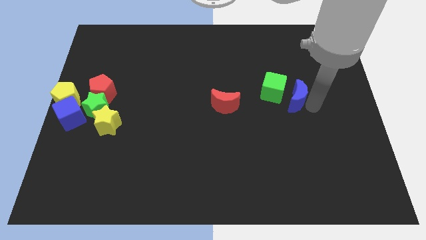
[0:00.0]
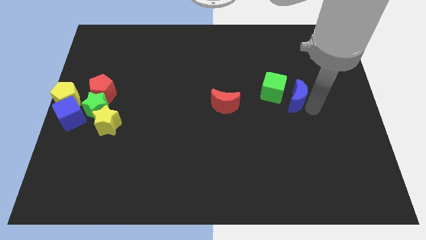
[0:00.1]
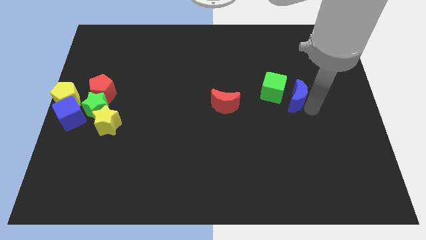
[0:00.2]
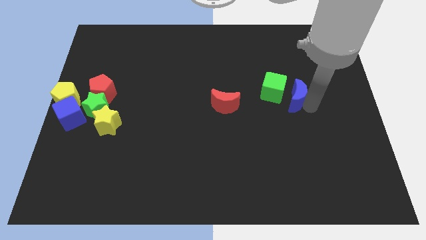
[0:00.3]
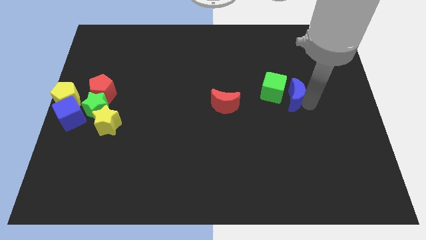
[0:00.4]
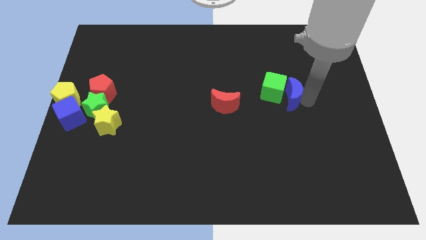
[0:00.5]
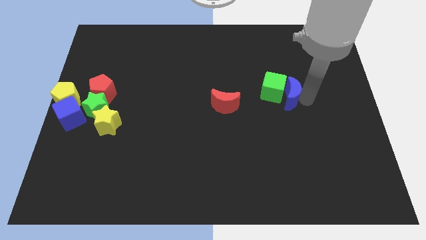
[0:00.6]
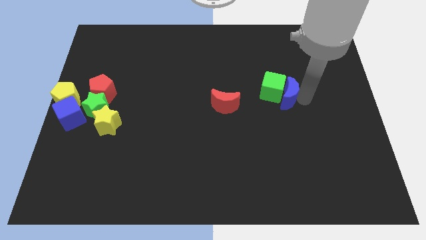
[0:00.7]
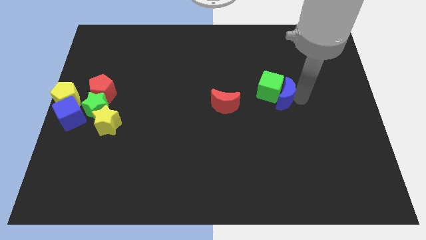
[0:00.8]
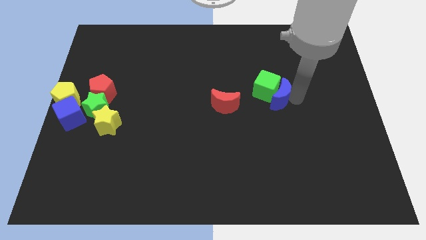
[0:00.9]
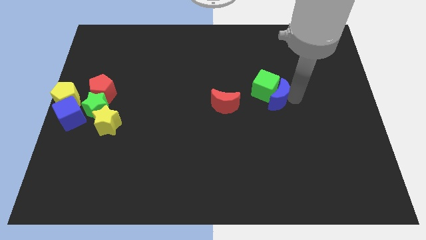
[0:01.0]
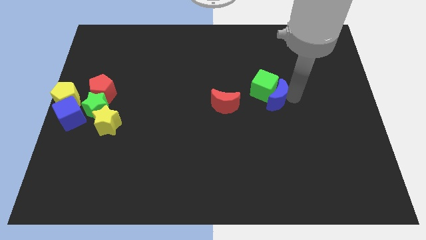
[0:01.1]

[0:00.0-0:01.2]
push the blue crescent into the green cube

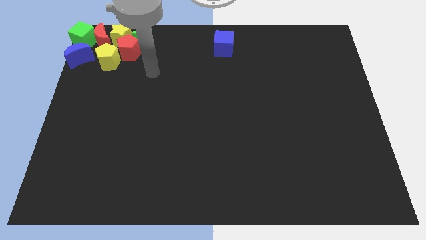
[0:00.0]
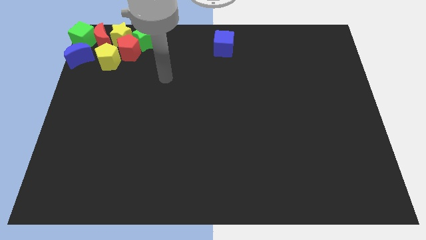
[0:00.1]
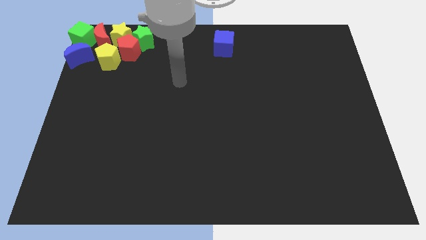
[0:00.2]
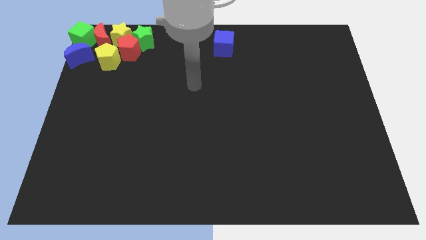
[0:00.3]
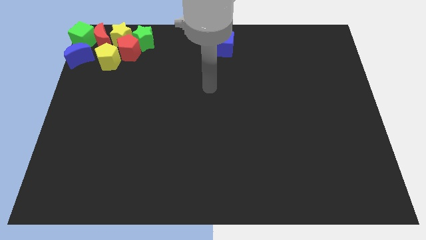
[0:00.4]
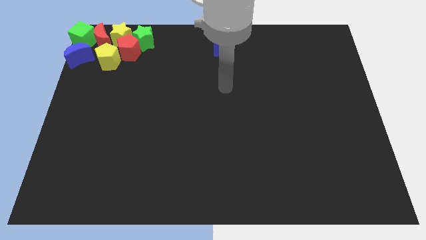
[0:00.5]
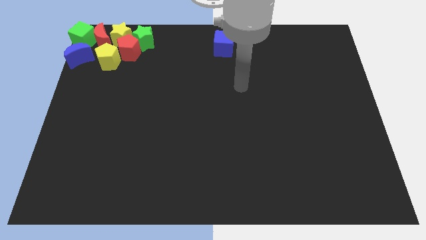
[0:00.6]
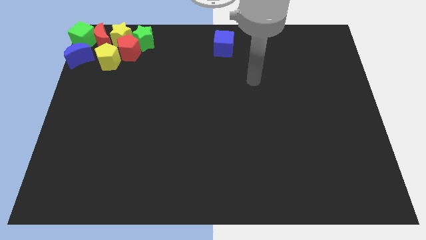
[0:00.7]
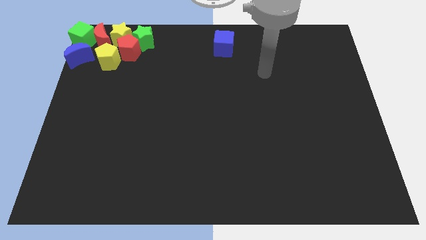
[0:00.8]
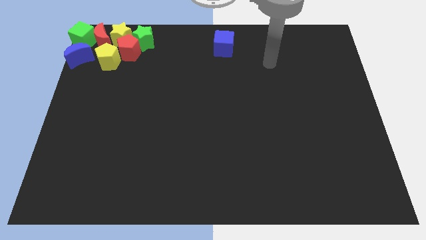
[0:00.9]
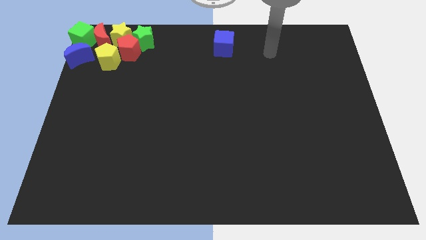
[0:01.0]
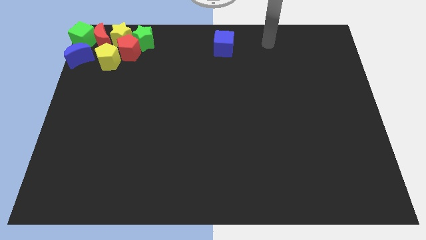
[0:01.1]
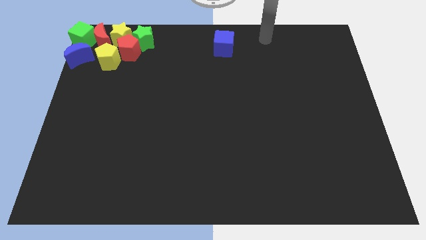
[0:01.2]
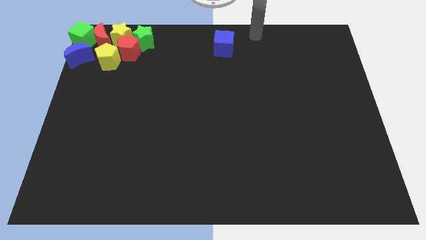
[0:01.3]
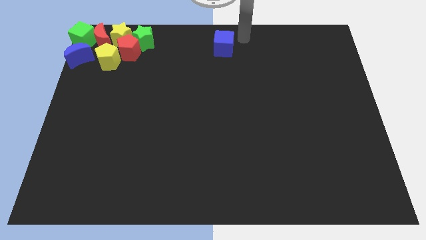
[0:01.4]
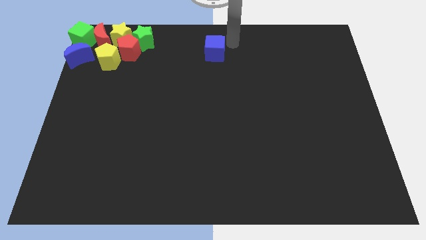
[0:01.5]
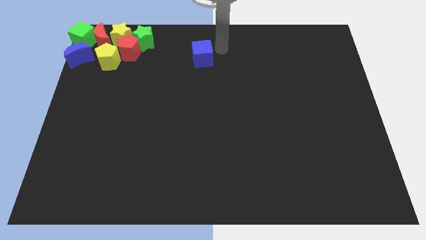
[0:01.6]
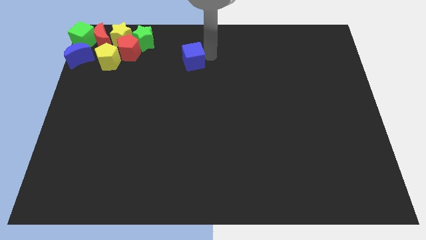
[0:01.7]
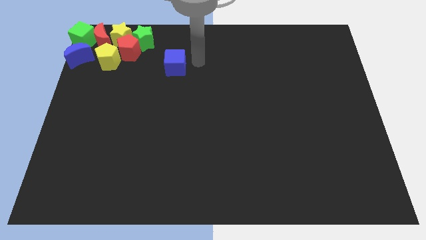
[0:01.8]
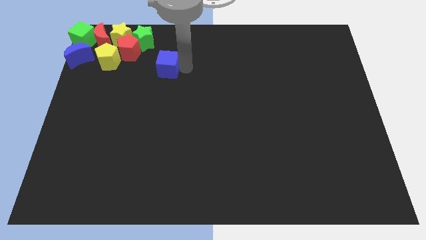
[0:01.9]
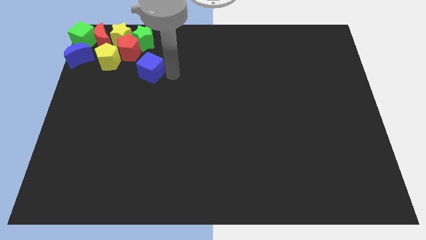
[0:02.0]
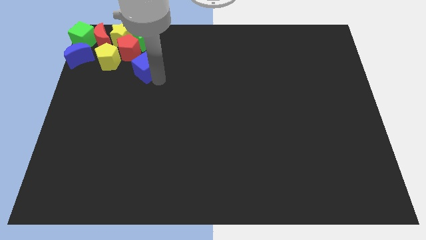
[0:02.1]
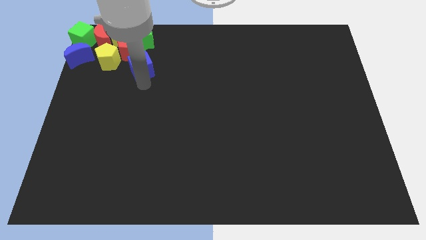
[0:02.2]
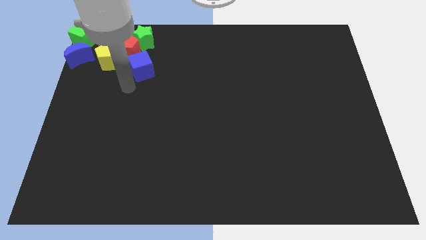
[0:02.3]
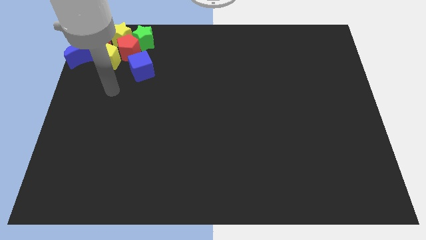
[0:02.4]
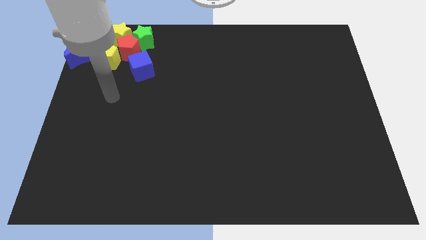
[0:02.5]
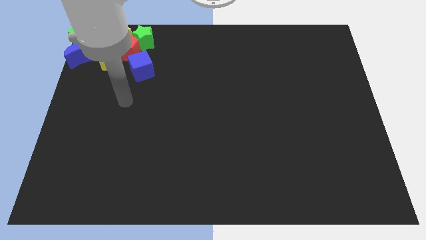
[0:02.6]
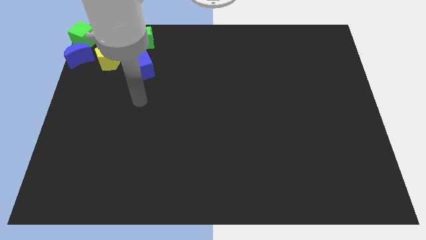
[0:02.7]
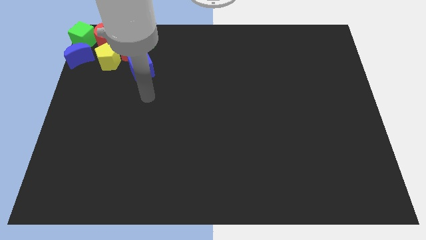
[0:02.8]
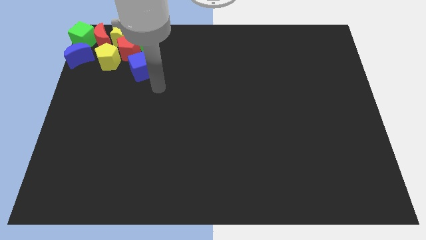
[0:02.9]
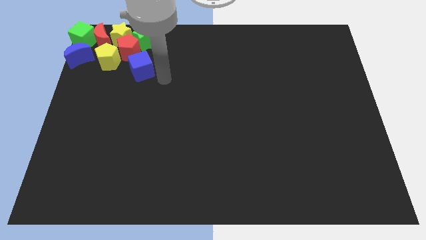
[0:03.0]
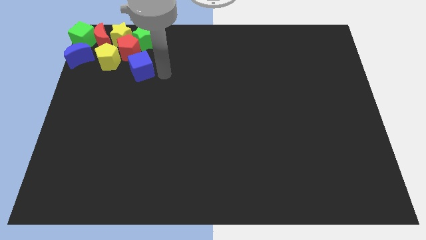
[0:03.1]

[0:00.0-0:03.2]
place the blue cube adjacent to red pentagon

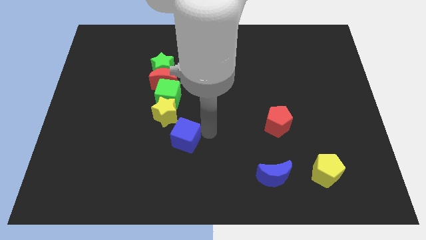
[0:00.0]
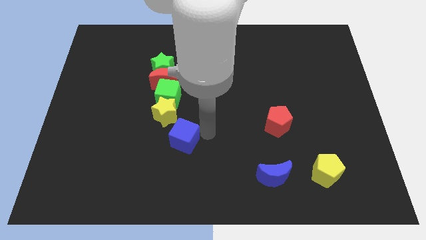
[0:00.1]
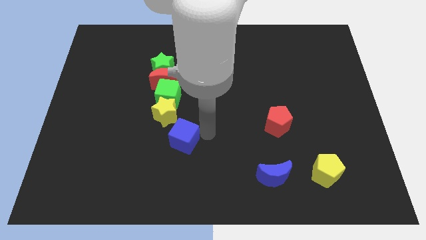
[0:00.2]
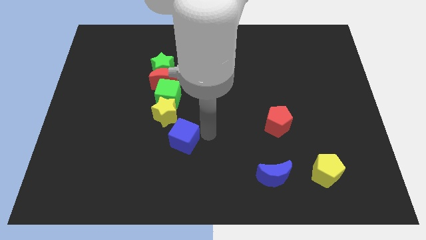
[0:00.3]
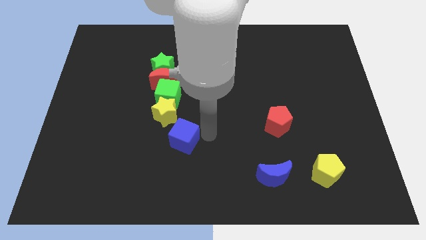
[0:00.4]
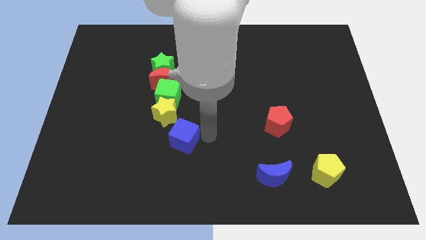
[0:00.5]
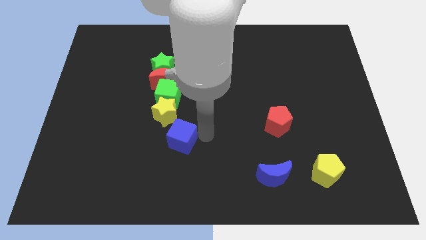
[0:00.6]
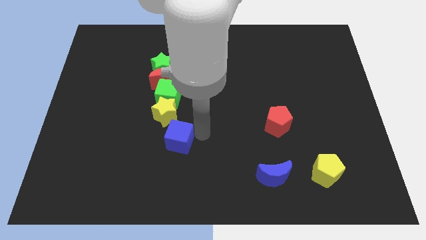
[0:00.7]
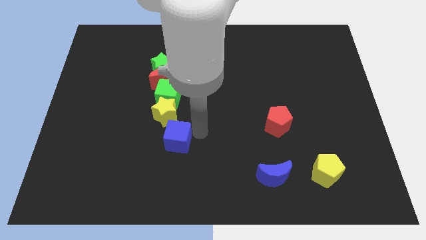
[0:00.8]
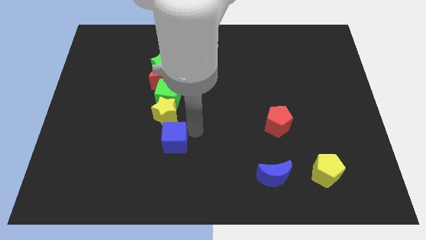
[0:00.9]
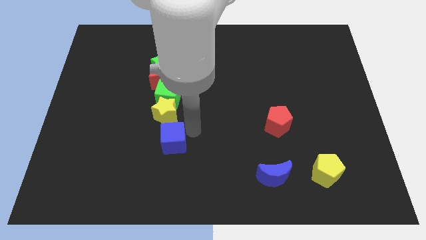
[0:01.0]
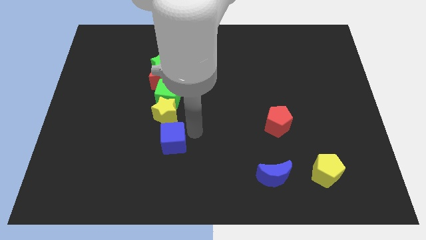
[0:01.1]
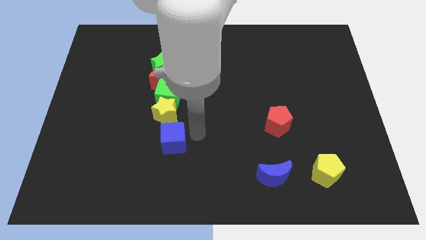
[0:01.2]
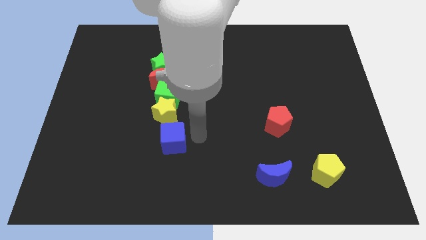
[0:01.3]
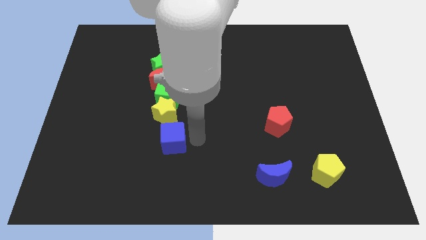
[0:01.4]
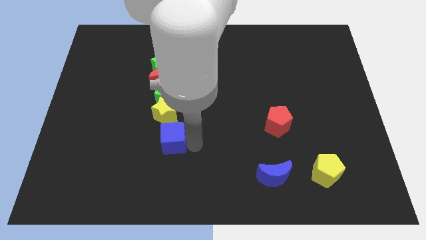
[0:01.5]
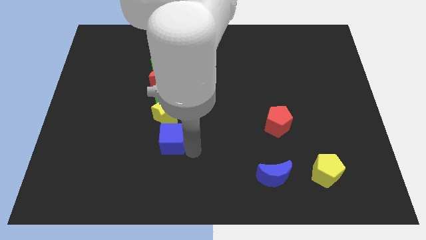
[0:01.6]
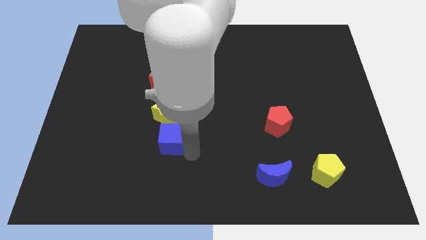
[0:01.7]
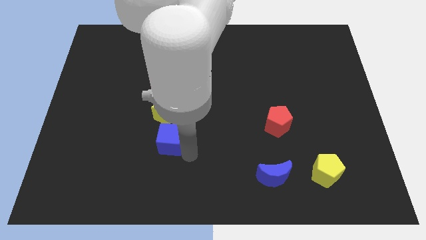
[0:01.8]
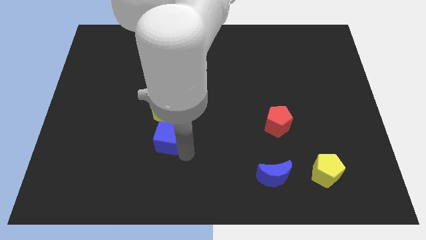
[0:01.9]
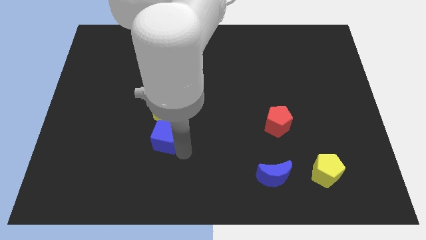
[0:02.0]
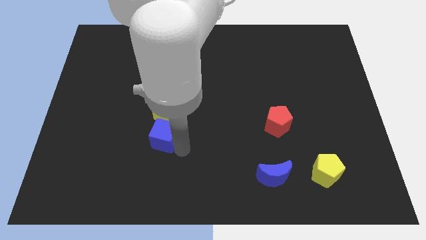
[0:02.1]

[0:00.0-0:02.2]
drag blue cube below yellow star

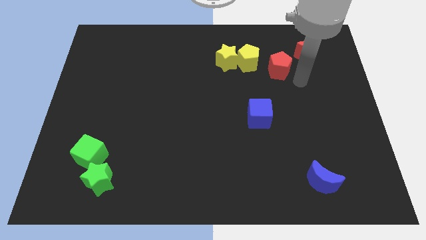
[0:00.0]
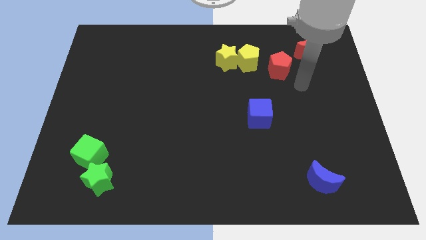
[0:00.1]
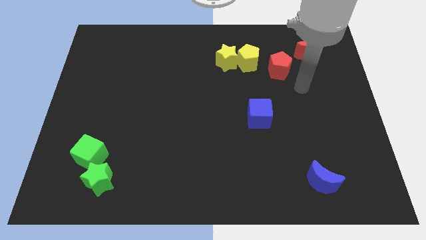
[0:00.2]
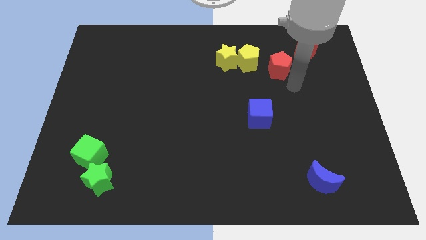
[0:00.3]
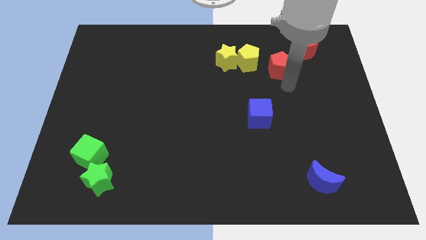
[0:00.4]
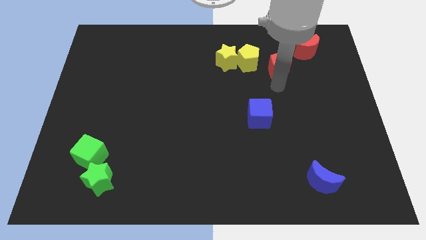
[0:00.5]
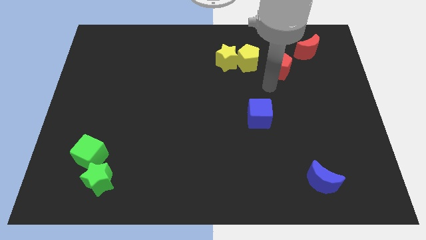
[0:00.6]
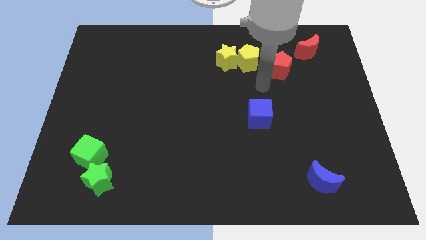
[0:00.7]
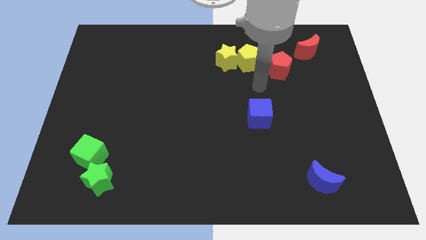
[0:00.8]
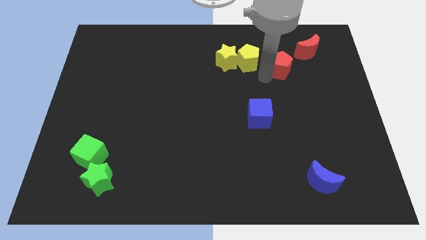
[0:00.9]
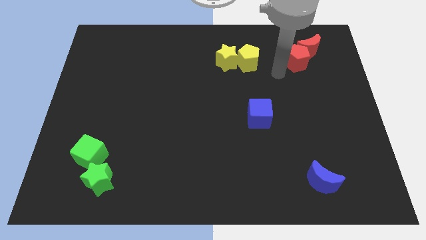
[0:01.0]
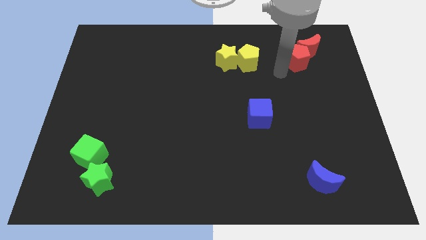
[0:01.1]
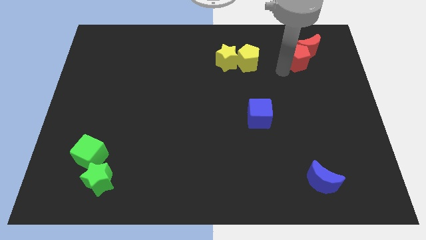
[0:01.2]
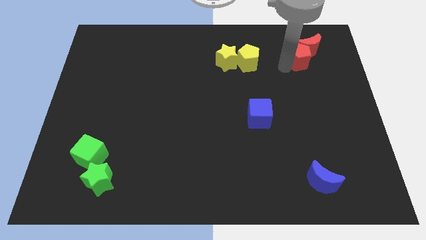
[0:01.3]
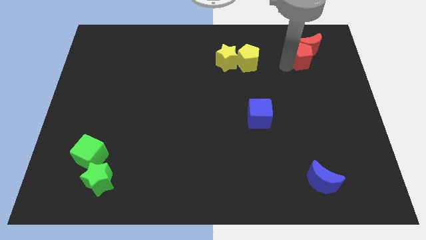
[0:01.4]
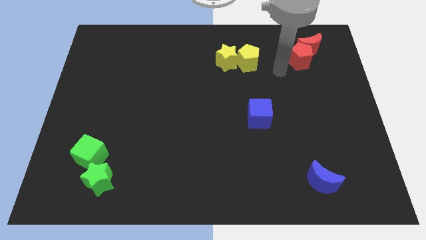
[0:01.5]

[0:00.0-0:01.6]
move the red pentagon into the red moon

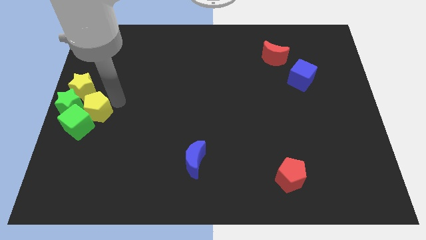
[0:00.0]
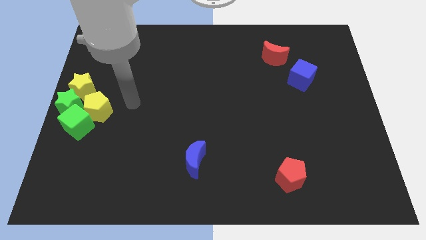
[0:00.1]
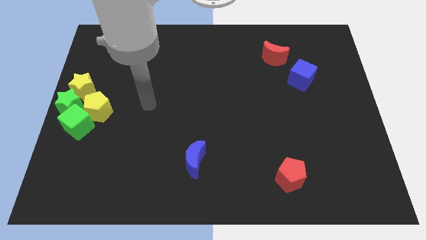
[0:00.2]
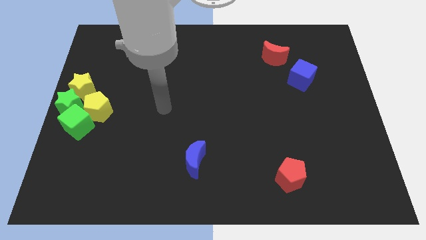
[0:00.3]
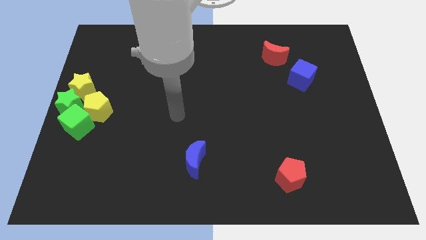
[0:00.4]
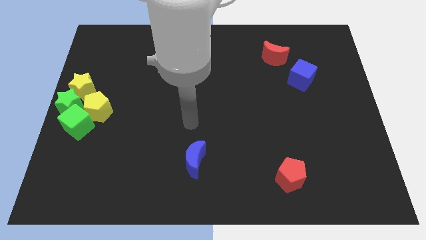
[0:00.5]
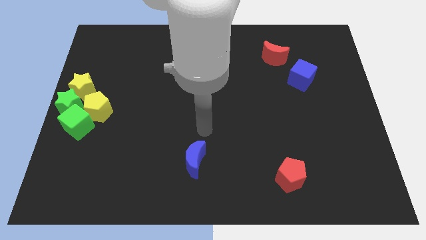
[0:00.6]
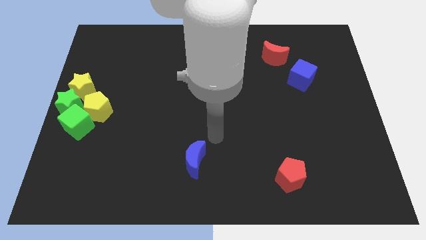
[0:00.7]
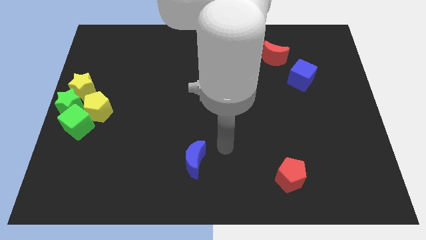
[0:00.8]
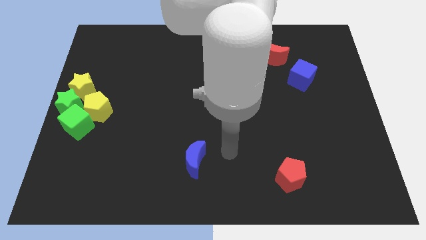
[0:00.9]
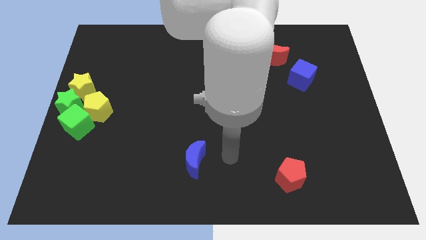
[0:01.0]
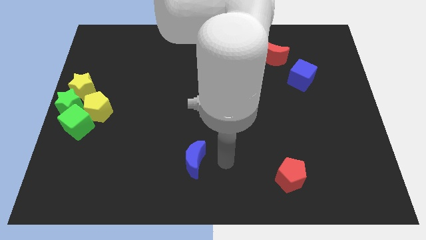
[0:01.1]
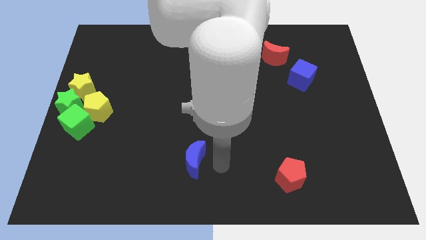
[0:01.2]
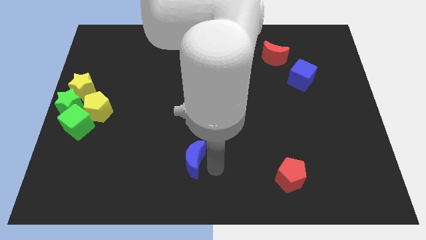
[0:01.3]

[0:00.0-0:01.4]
place your arm to right side of the blue crescent
